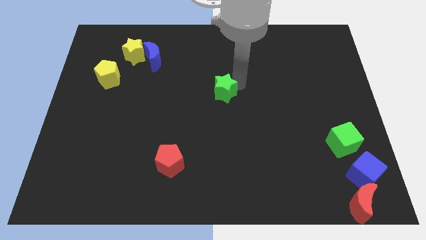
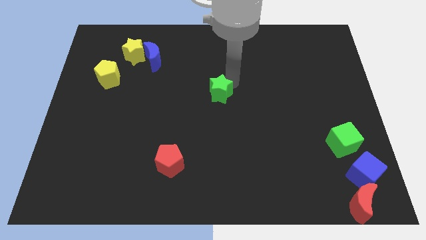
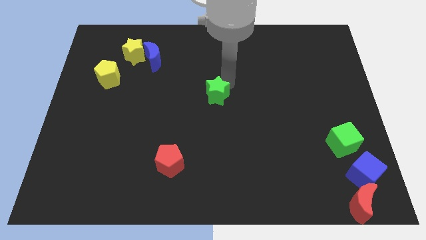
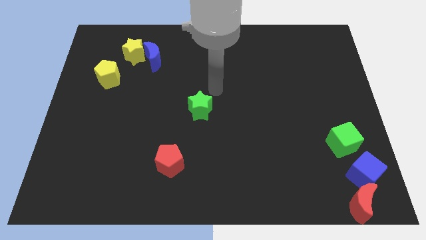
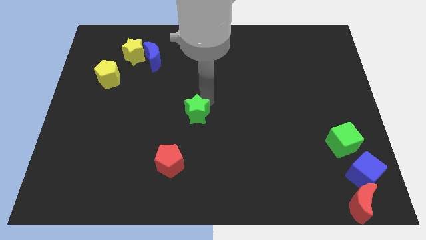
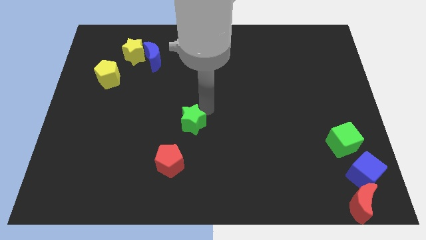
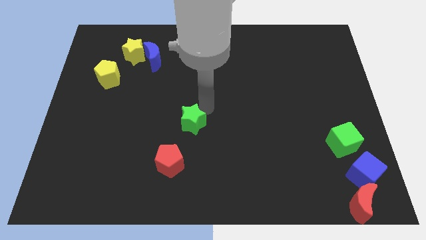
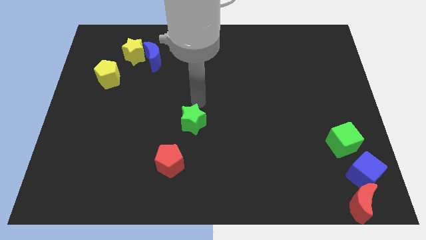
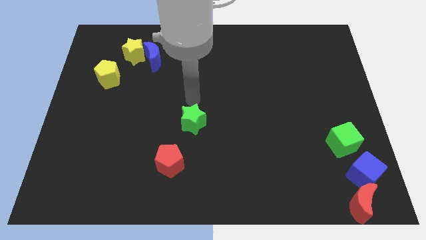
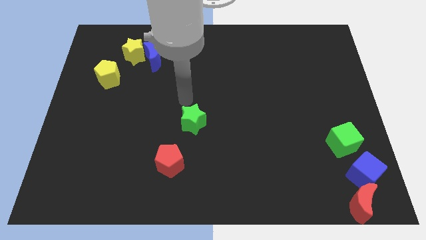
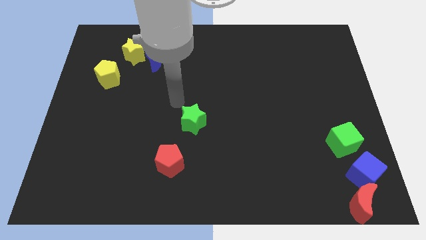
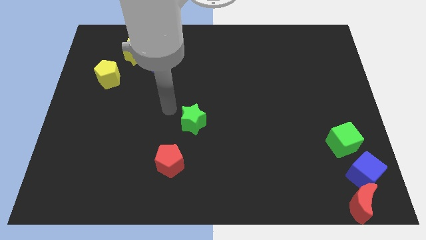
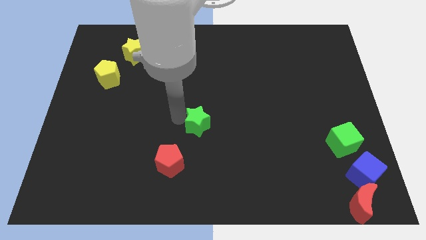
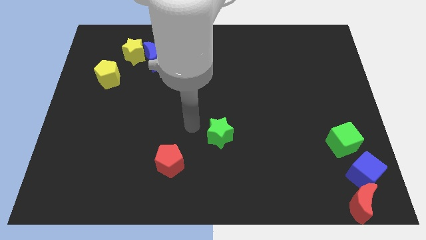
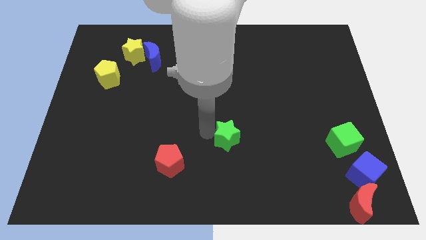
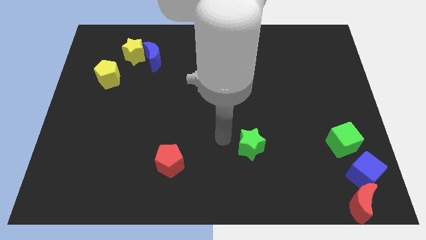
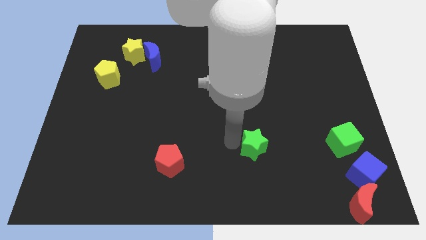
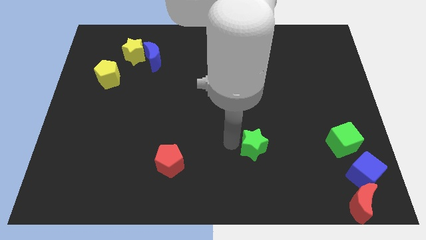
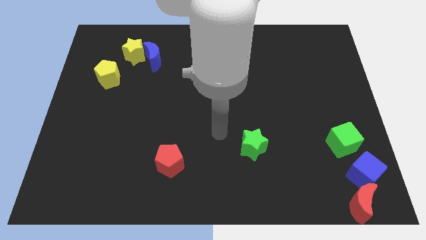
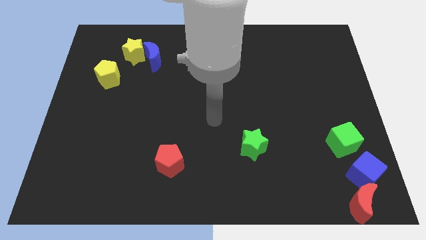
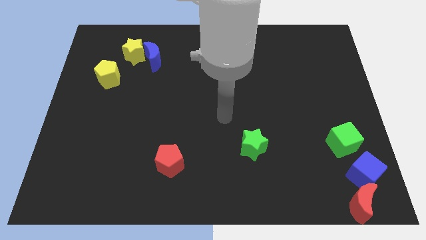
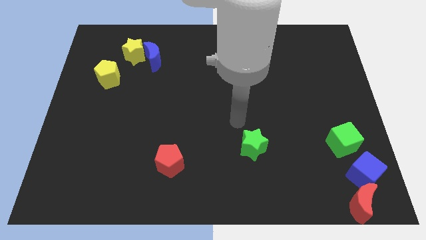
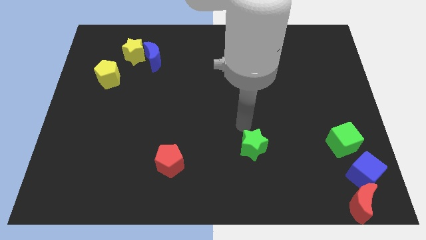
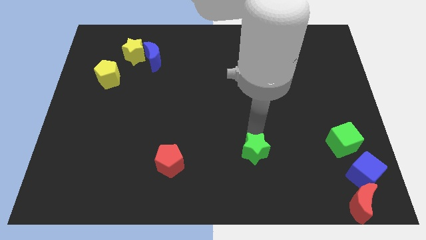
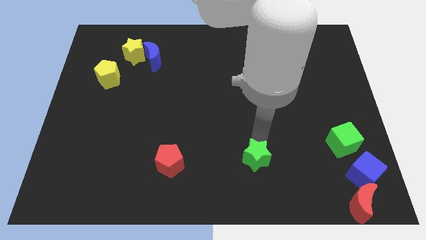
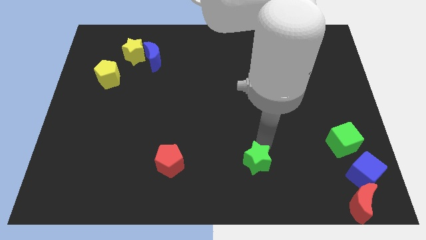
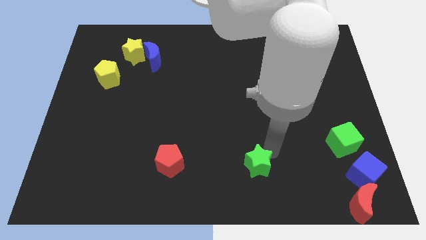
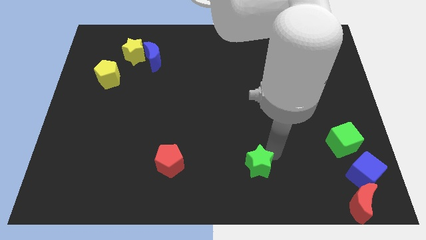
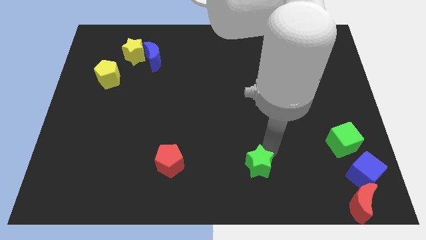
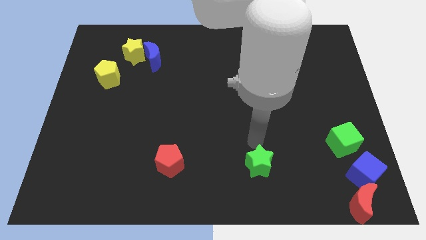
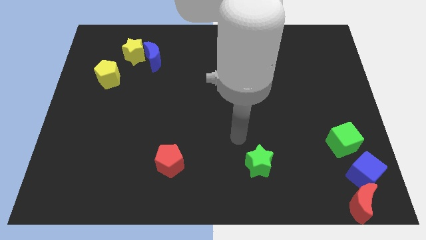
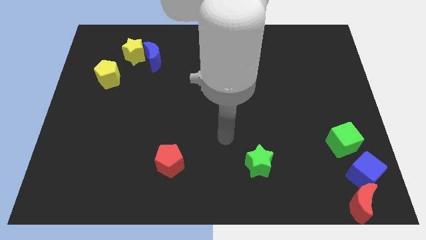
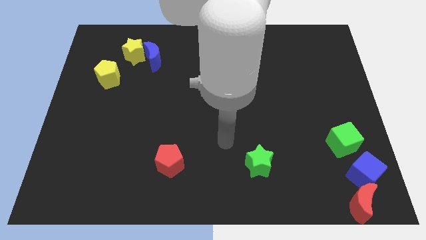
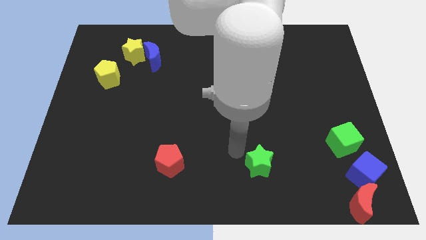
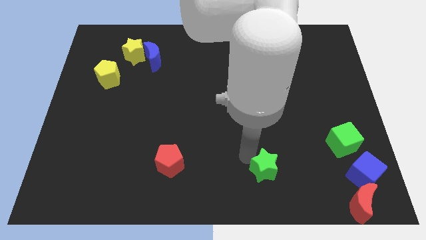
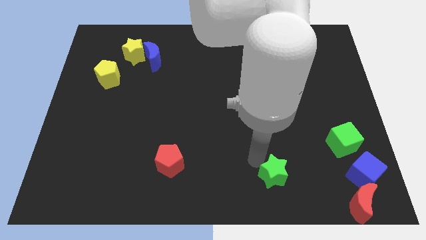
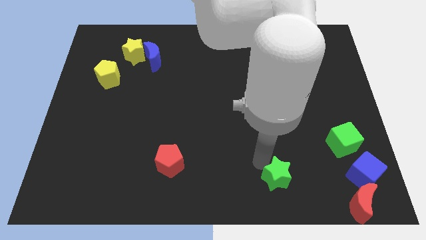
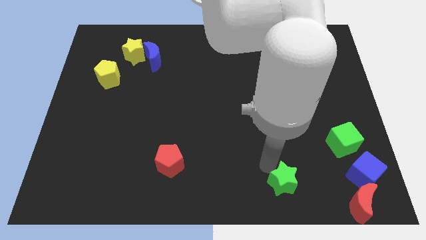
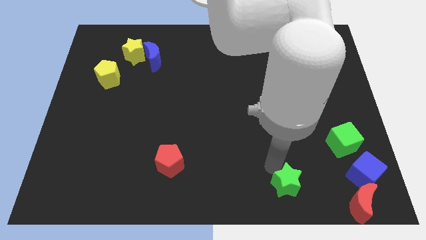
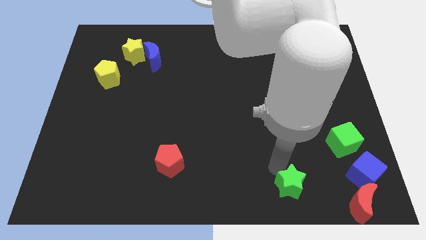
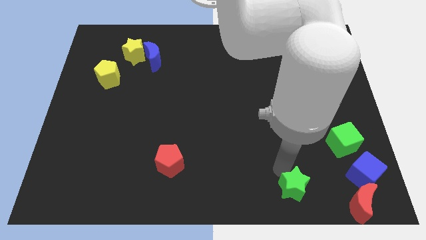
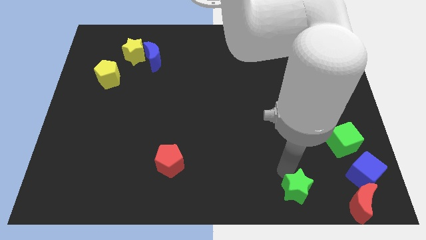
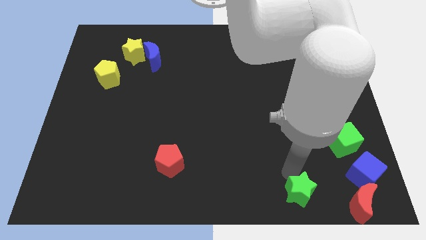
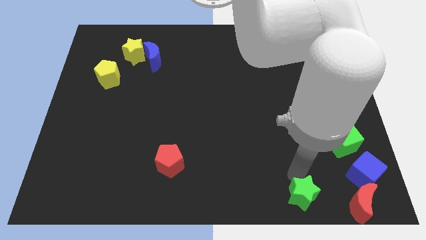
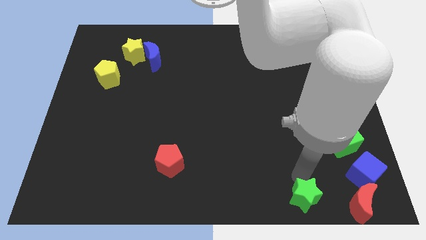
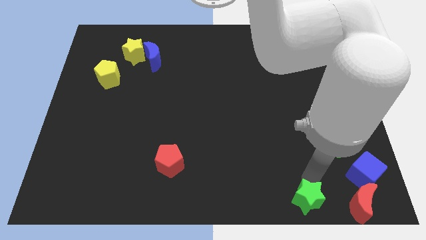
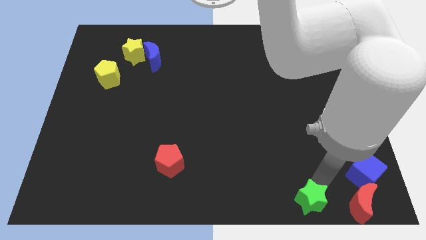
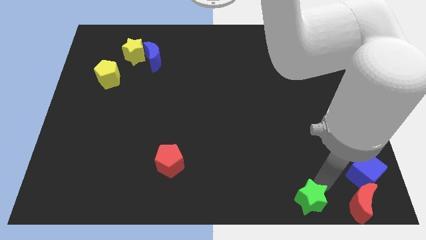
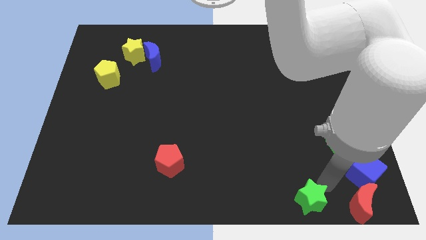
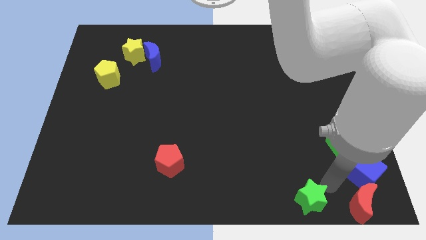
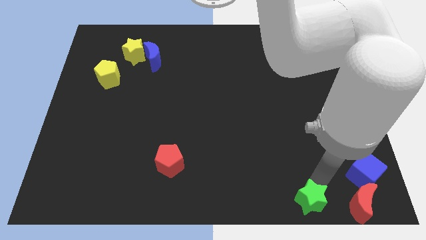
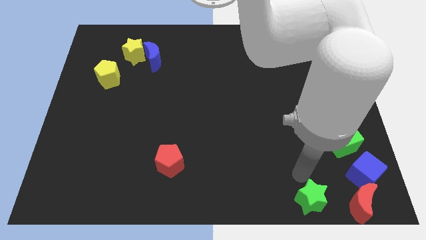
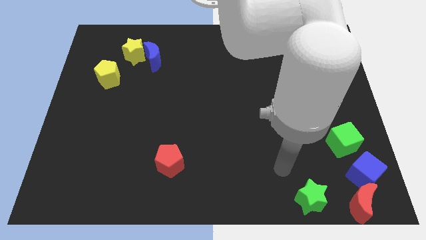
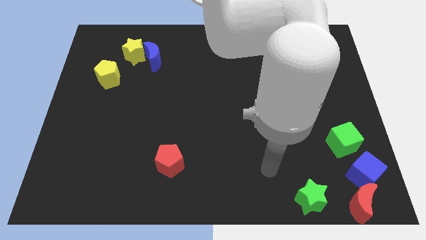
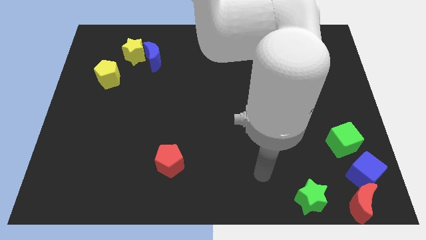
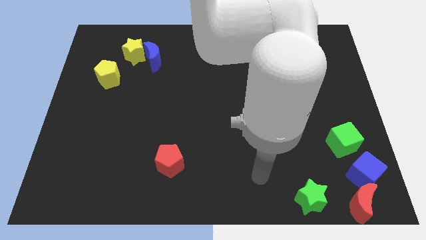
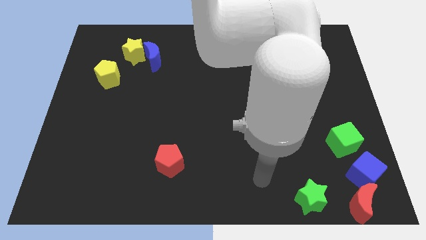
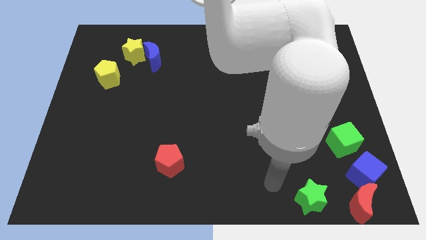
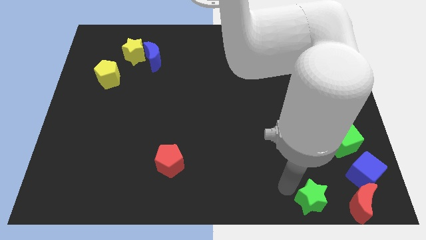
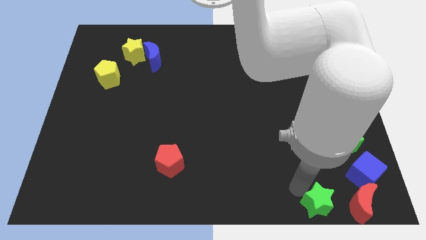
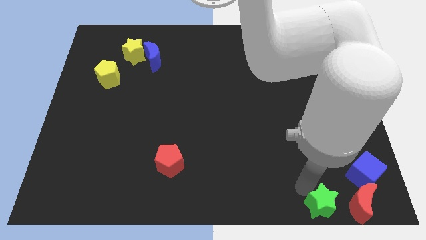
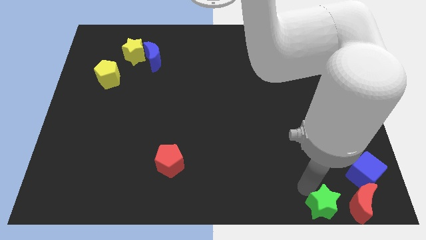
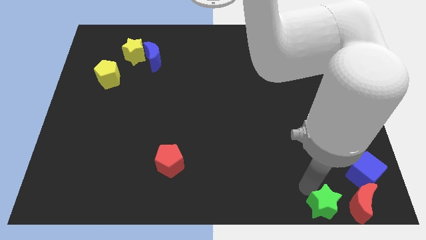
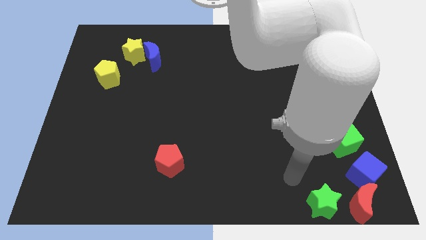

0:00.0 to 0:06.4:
place the green cube to the left of red crescent

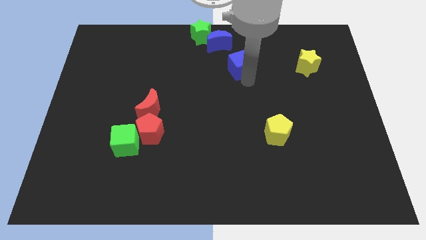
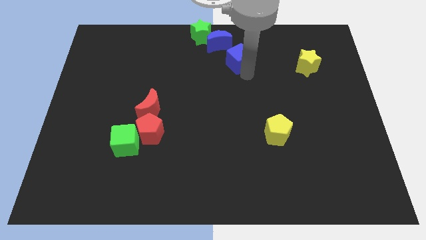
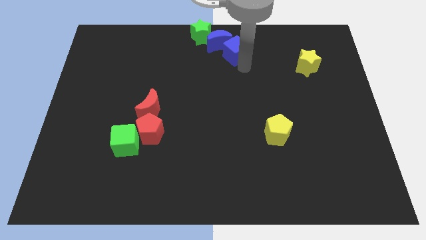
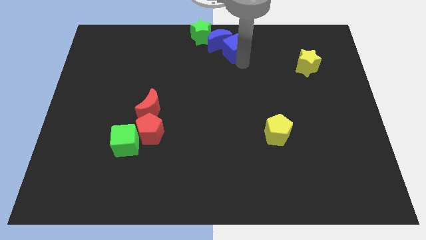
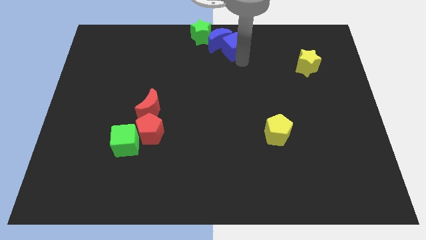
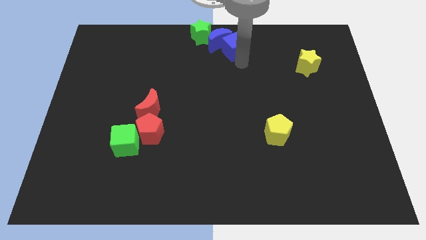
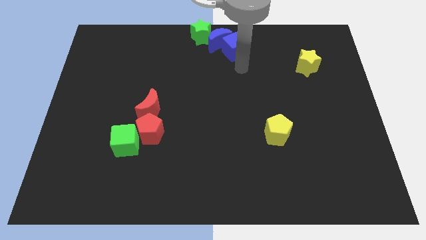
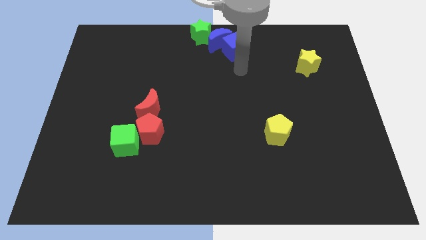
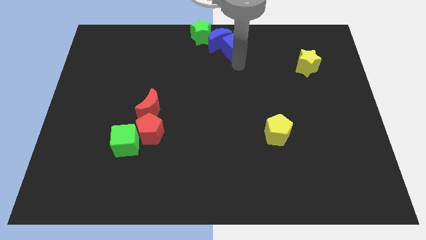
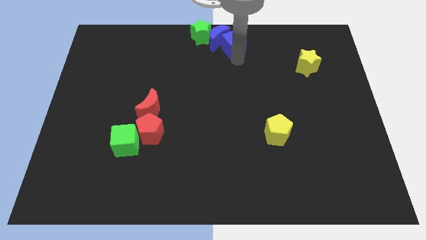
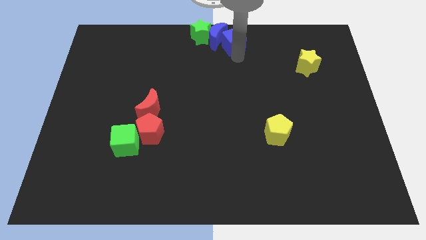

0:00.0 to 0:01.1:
push the blue cube upwards

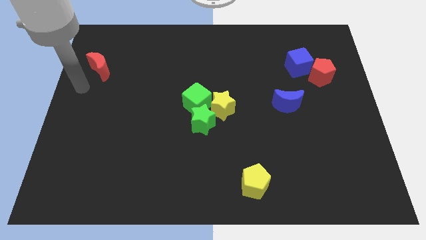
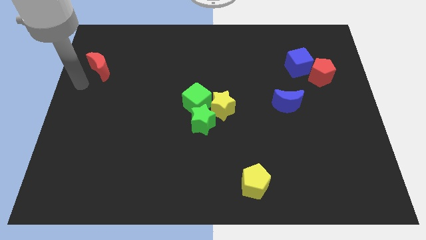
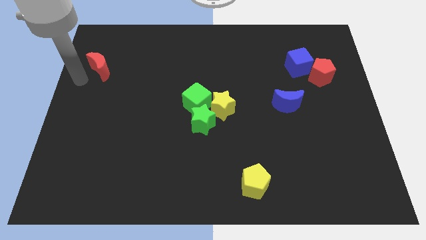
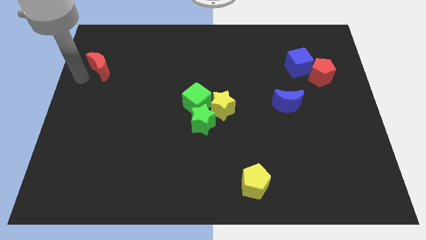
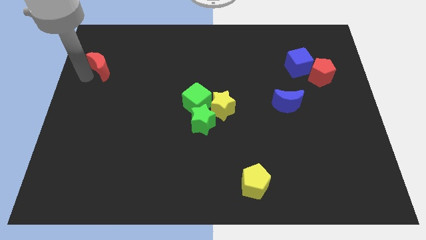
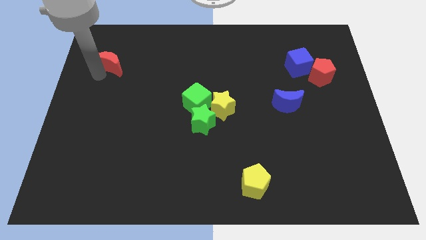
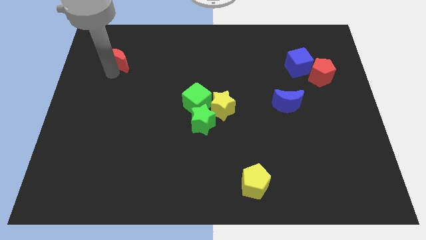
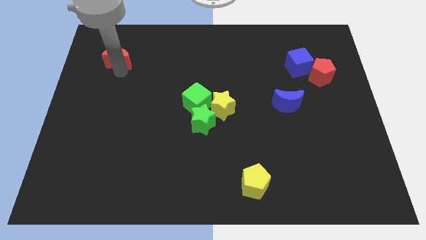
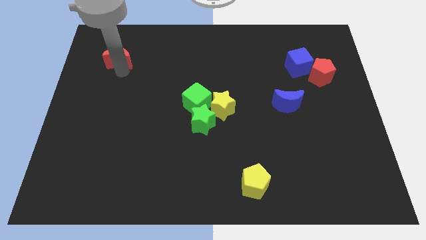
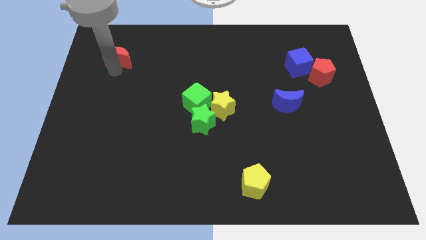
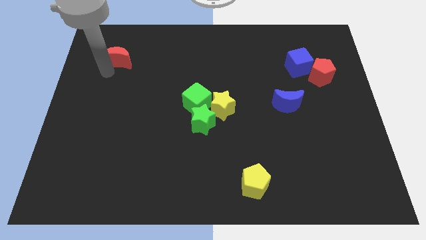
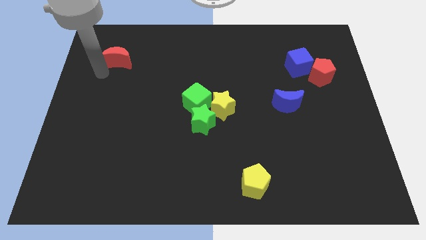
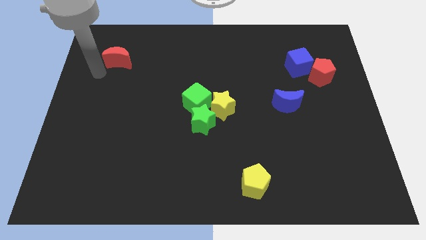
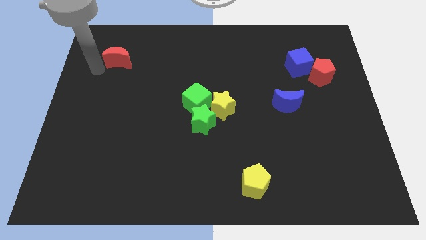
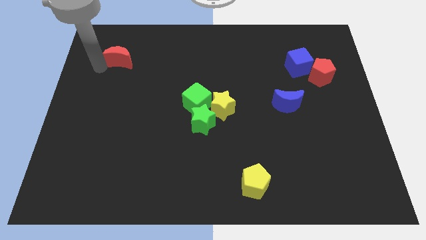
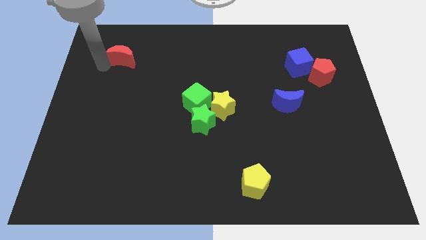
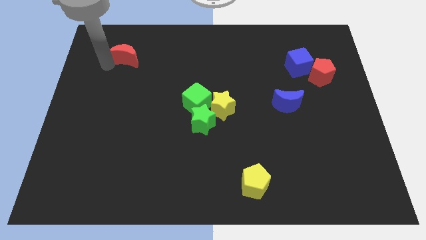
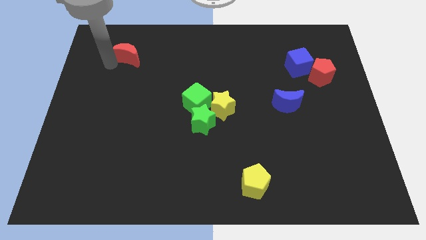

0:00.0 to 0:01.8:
push red moon towards top side of the board
